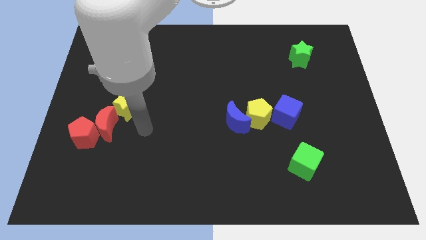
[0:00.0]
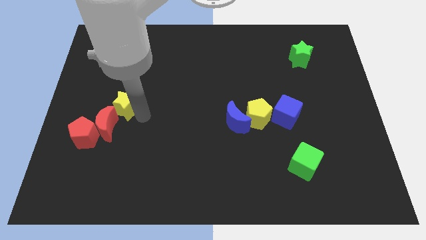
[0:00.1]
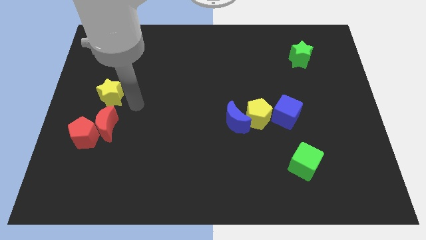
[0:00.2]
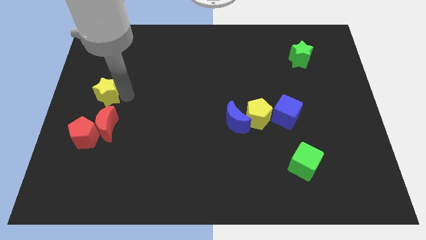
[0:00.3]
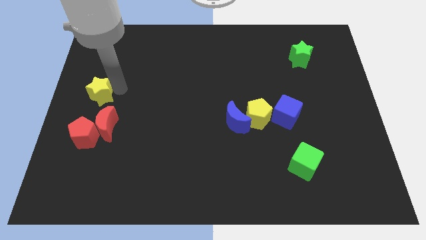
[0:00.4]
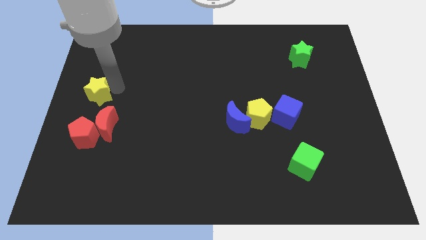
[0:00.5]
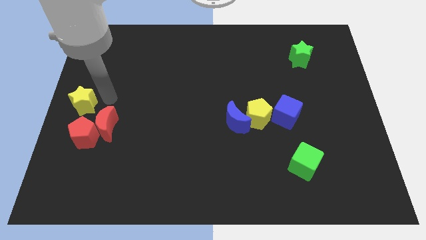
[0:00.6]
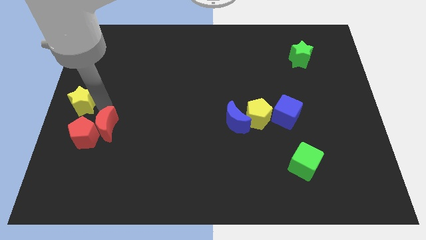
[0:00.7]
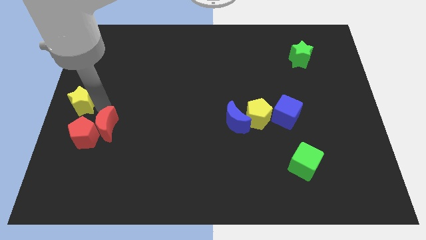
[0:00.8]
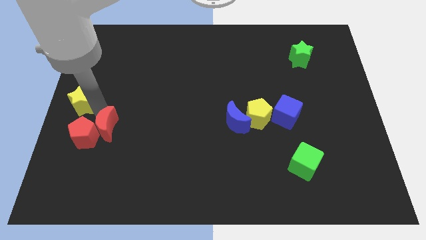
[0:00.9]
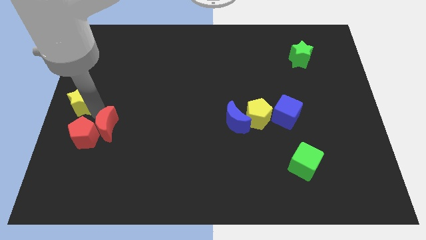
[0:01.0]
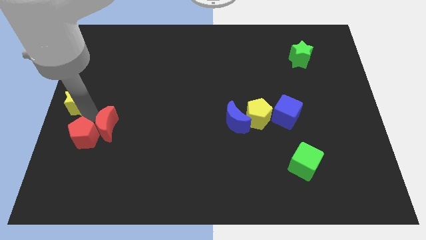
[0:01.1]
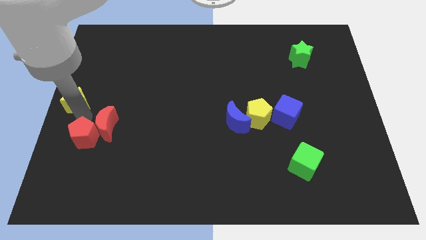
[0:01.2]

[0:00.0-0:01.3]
push yellow star above red pentagon

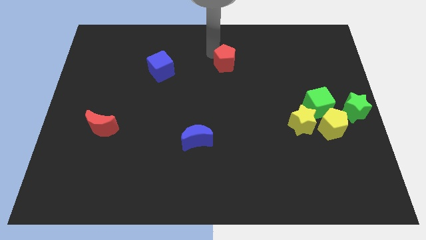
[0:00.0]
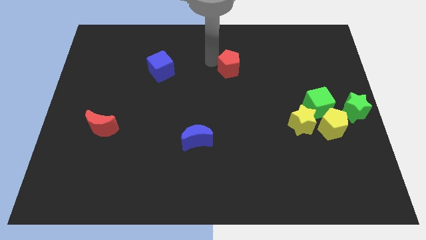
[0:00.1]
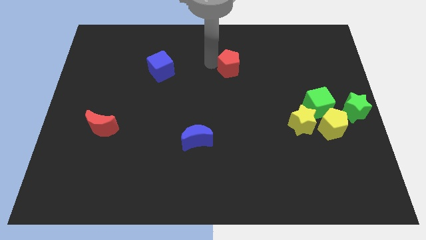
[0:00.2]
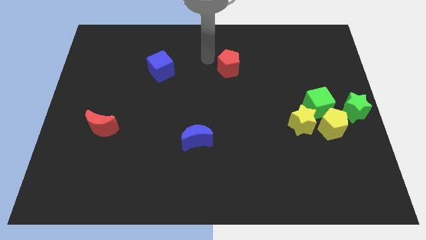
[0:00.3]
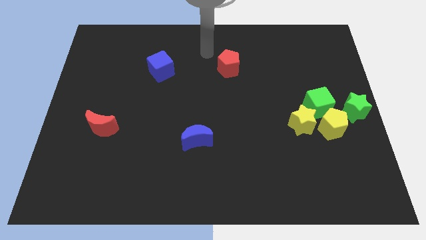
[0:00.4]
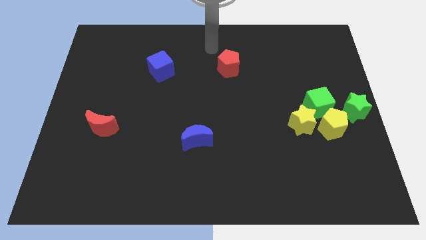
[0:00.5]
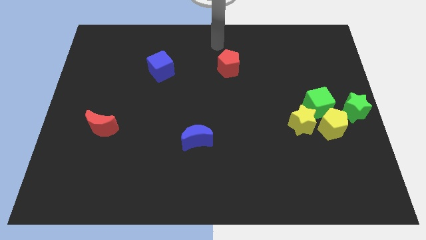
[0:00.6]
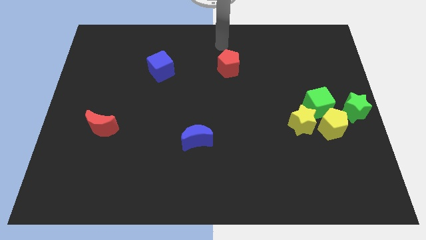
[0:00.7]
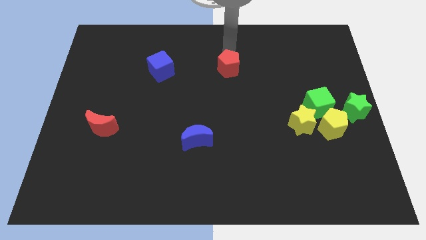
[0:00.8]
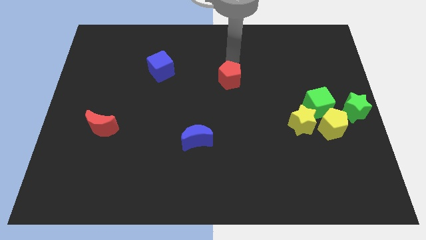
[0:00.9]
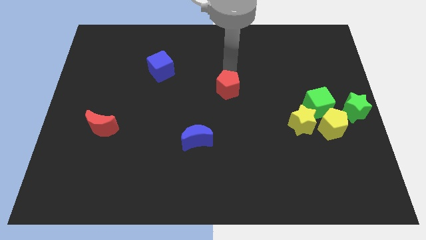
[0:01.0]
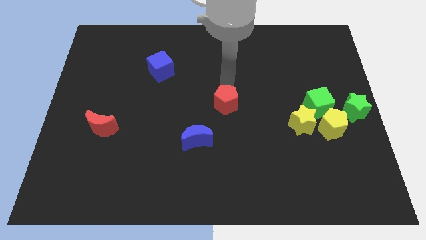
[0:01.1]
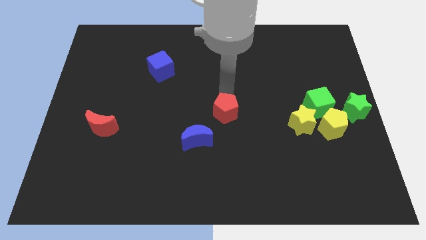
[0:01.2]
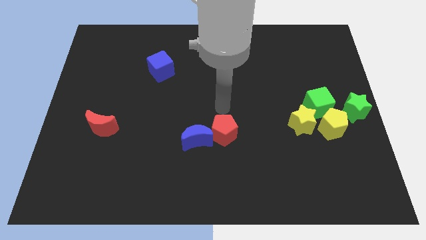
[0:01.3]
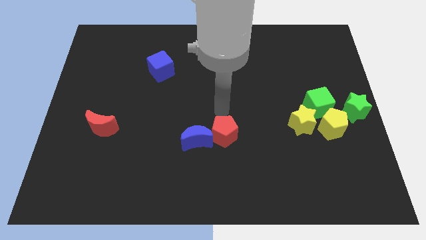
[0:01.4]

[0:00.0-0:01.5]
slide the red pentagon into the blue crescent

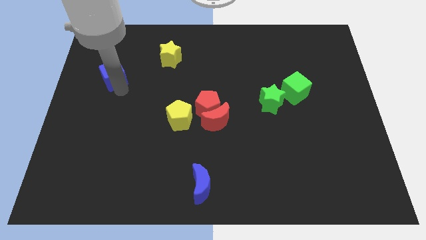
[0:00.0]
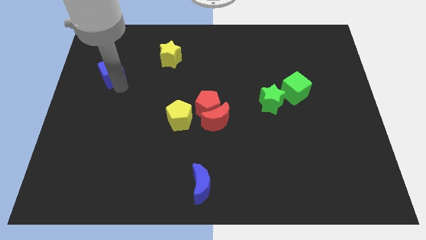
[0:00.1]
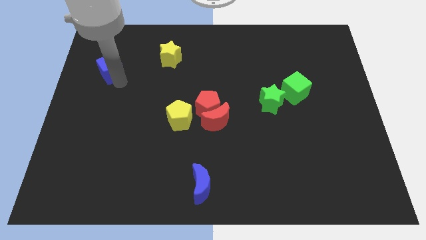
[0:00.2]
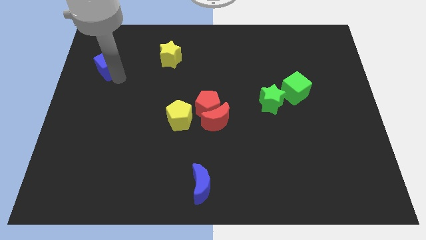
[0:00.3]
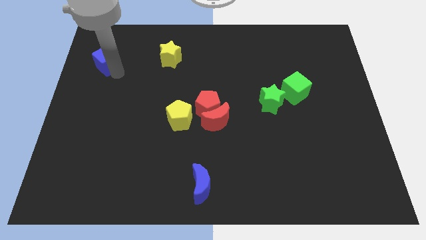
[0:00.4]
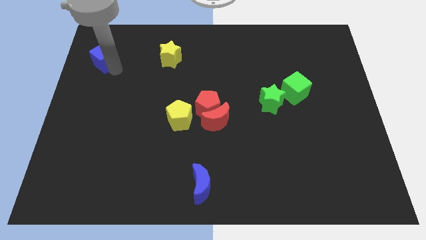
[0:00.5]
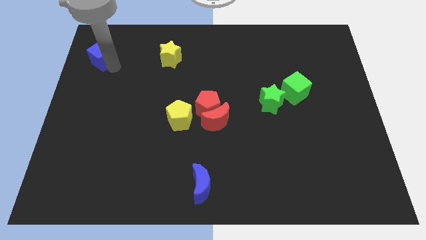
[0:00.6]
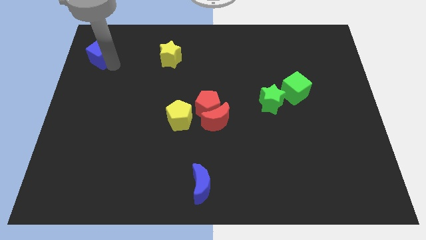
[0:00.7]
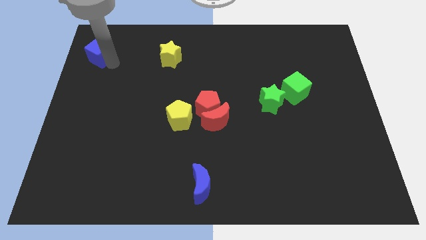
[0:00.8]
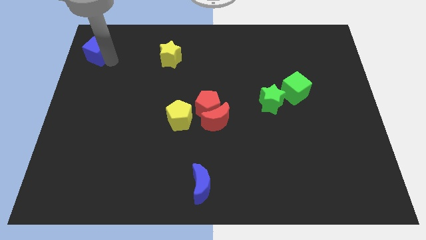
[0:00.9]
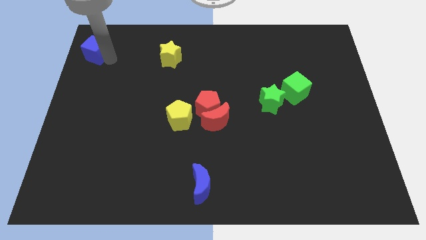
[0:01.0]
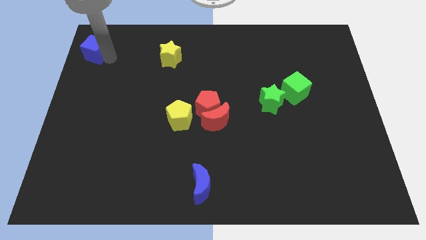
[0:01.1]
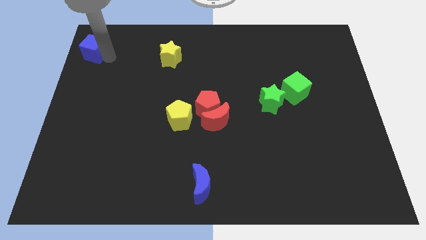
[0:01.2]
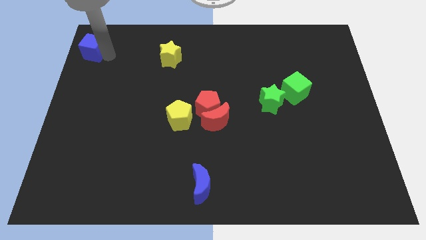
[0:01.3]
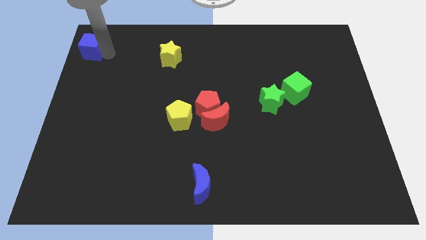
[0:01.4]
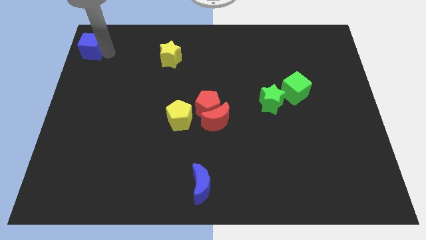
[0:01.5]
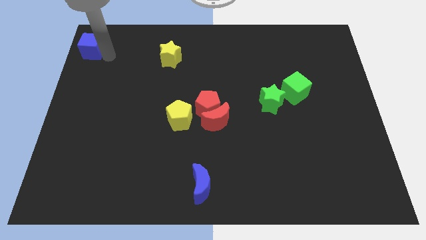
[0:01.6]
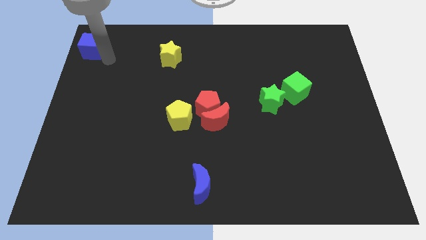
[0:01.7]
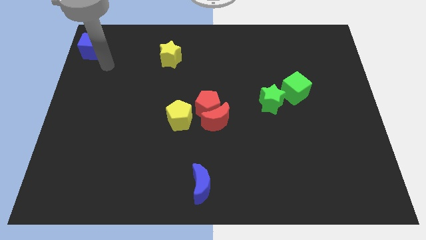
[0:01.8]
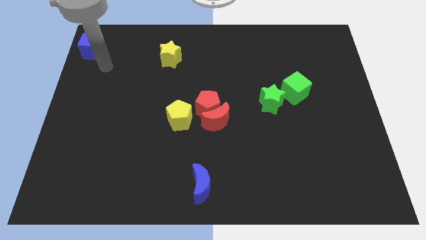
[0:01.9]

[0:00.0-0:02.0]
move the blue cube to the top left side

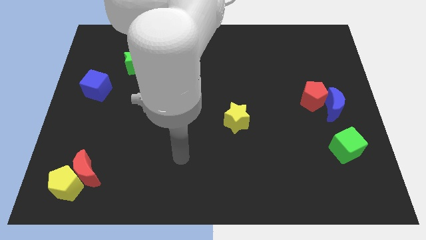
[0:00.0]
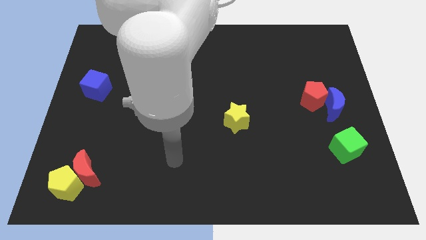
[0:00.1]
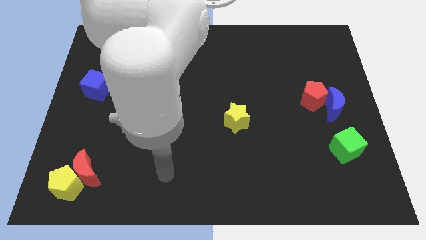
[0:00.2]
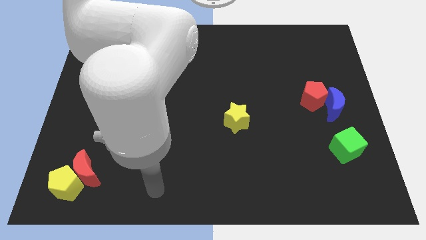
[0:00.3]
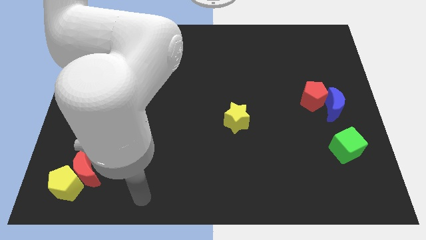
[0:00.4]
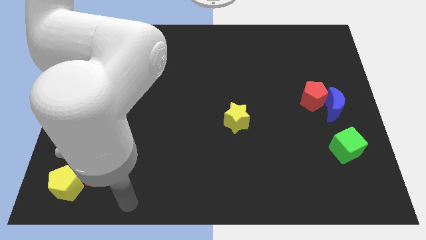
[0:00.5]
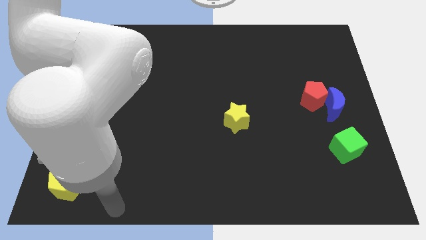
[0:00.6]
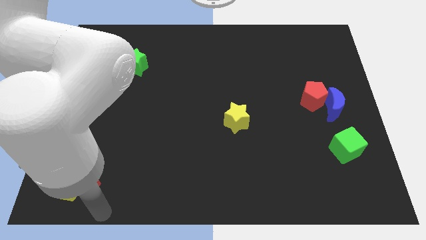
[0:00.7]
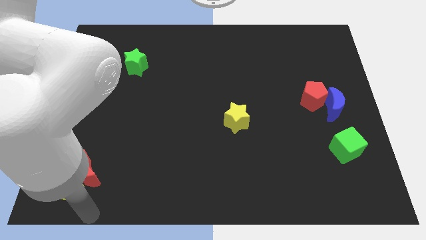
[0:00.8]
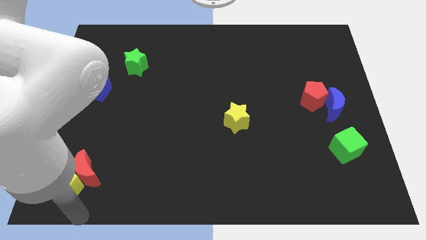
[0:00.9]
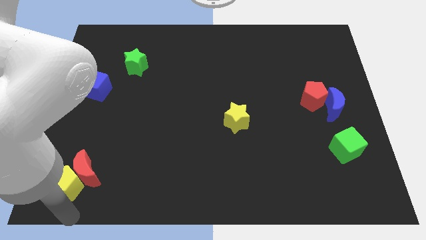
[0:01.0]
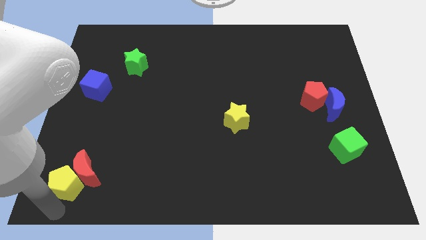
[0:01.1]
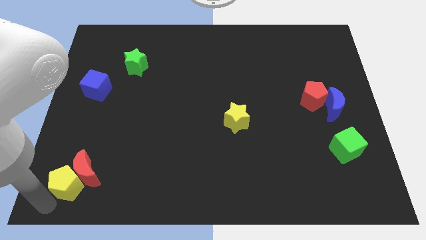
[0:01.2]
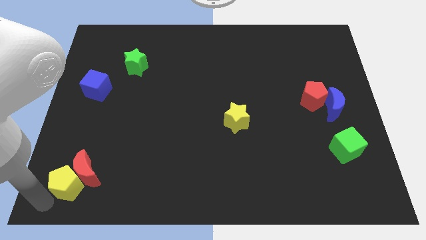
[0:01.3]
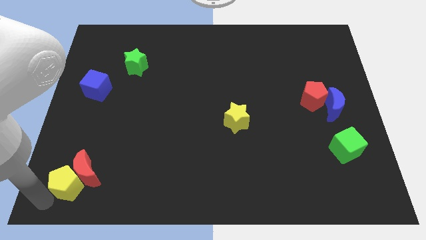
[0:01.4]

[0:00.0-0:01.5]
point your hand at the bottom left side of the yellow pentagon

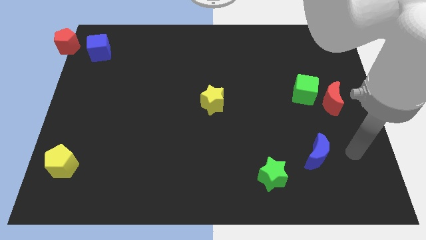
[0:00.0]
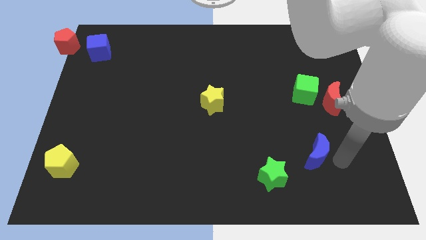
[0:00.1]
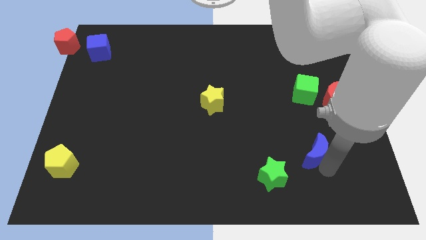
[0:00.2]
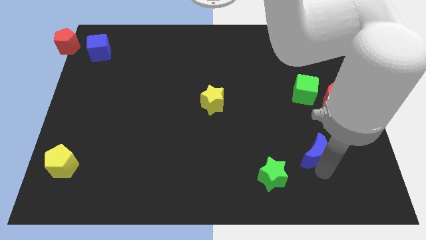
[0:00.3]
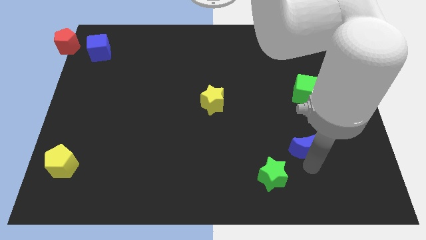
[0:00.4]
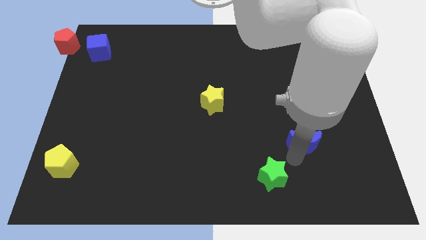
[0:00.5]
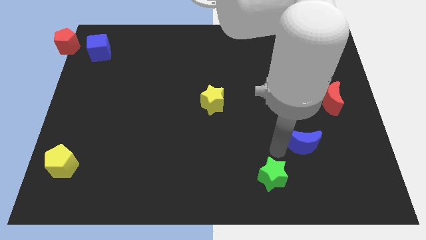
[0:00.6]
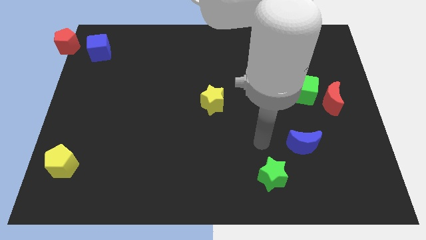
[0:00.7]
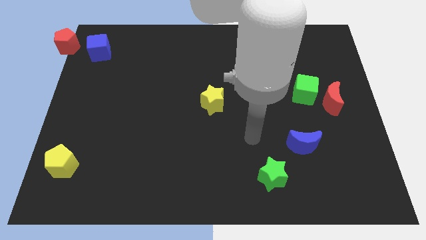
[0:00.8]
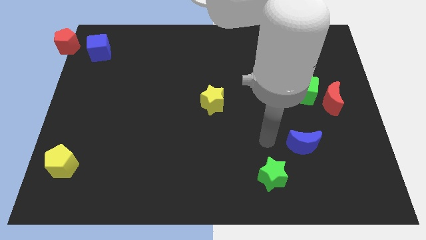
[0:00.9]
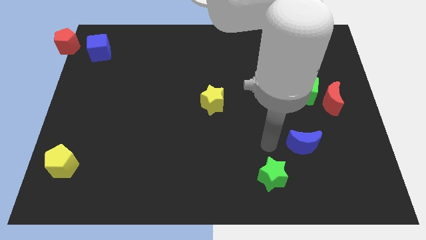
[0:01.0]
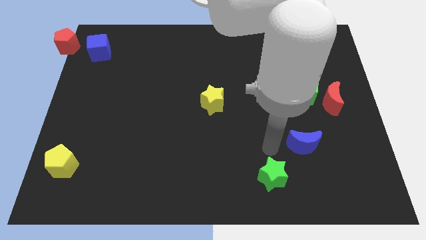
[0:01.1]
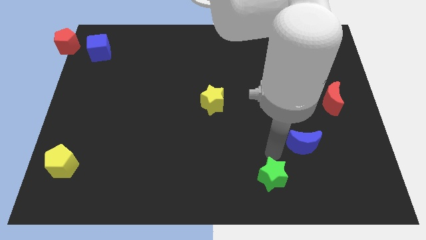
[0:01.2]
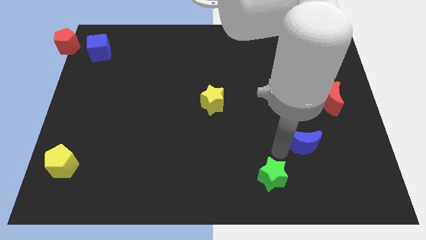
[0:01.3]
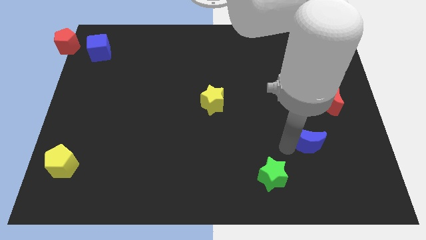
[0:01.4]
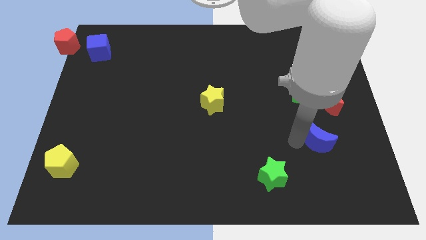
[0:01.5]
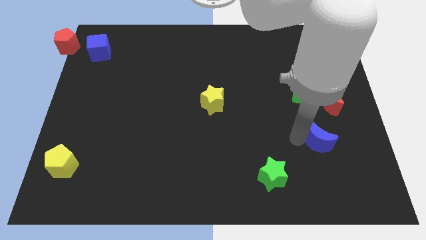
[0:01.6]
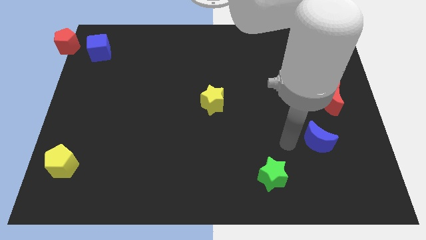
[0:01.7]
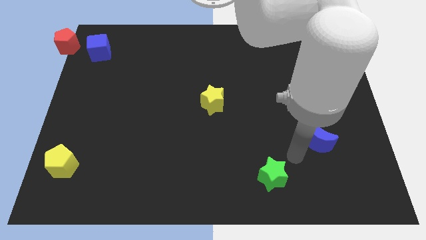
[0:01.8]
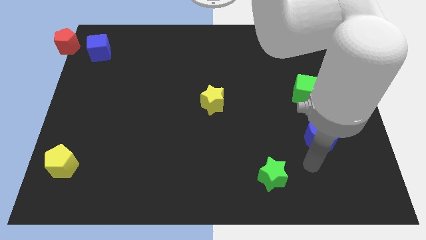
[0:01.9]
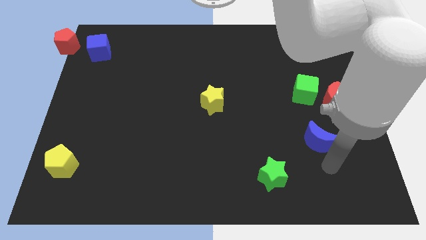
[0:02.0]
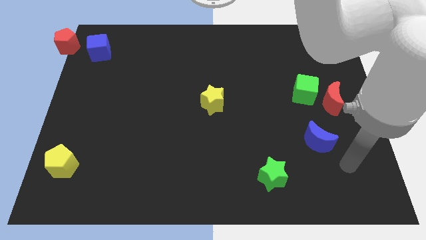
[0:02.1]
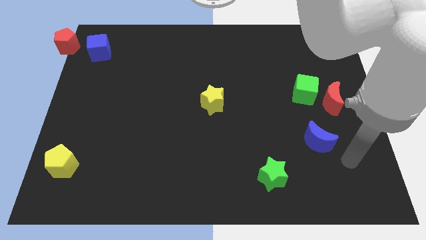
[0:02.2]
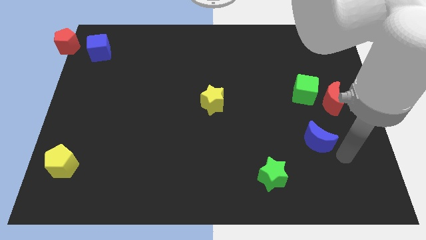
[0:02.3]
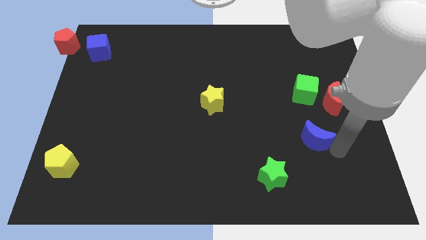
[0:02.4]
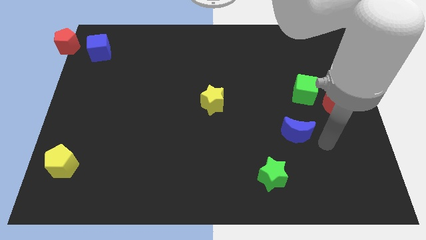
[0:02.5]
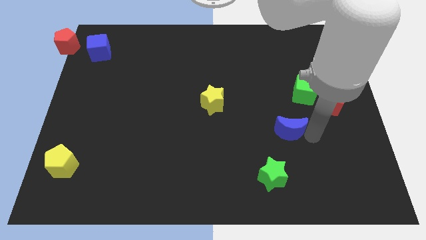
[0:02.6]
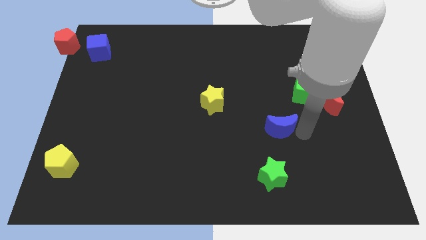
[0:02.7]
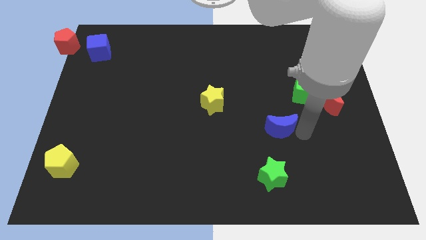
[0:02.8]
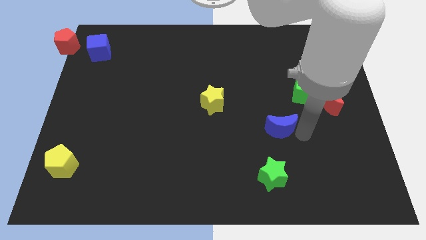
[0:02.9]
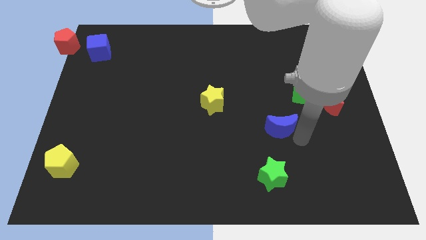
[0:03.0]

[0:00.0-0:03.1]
place blue crescent to the center
